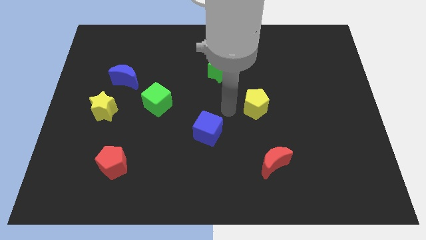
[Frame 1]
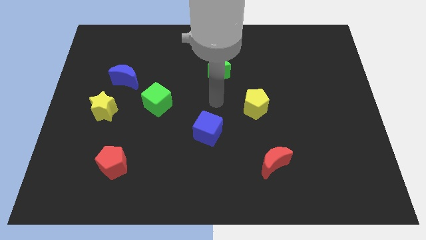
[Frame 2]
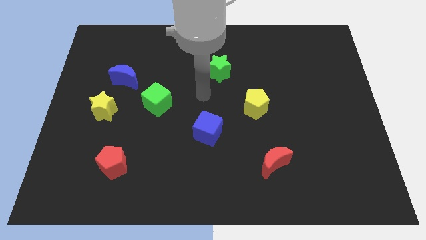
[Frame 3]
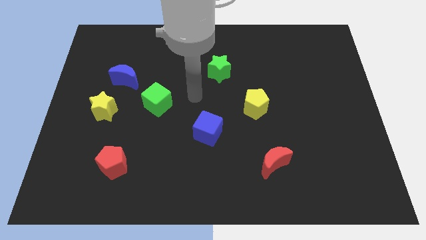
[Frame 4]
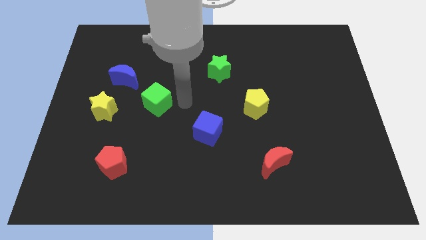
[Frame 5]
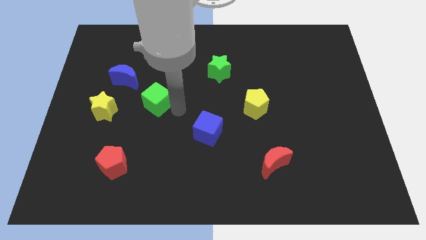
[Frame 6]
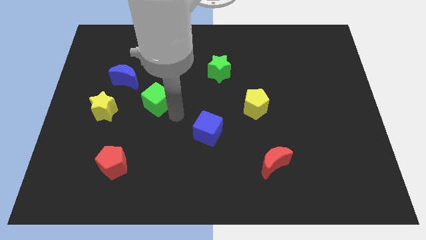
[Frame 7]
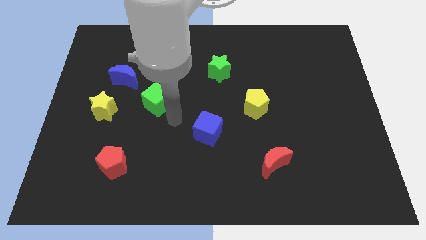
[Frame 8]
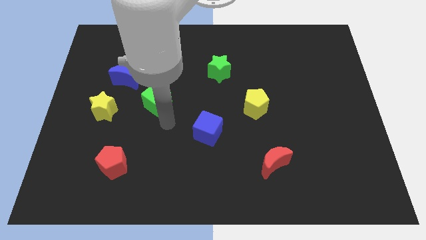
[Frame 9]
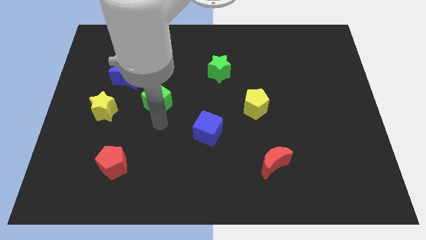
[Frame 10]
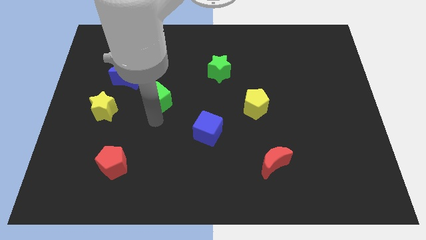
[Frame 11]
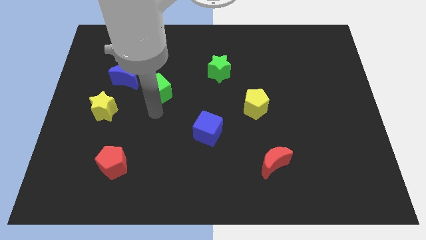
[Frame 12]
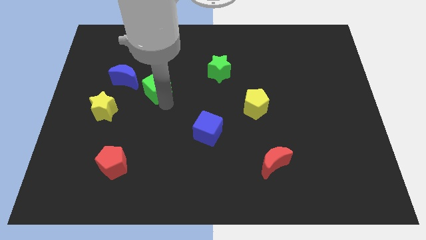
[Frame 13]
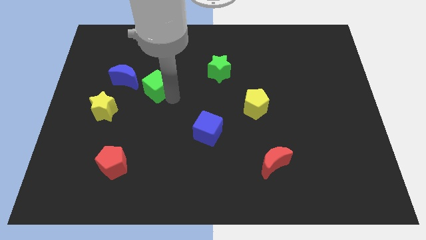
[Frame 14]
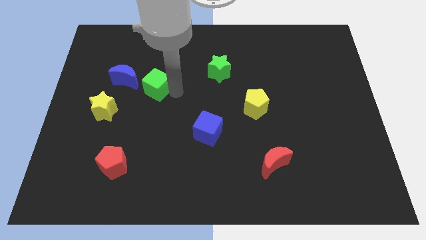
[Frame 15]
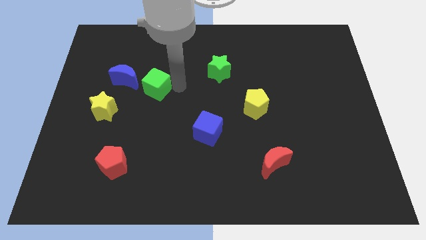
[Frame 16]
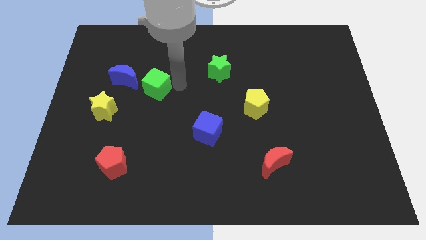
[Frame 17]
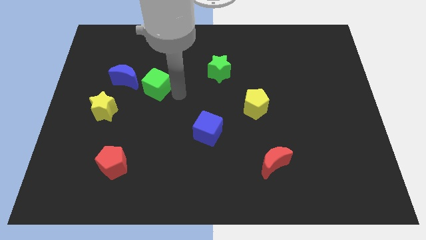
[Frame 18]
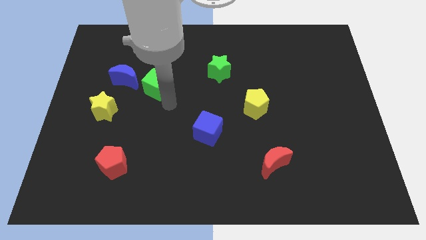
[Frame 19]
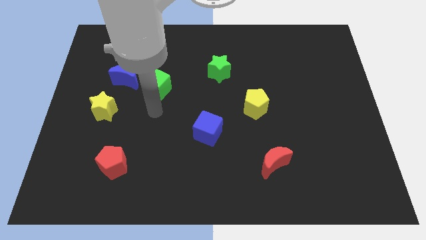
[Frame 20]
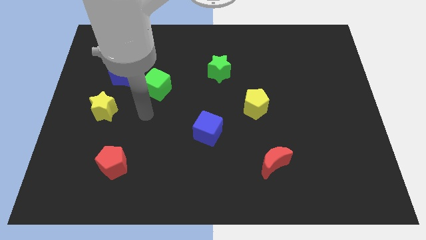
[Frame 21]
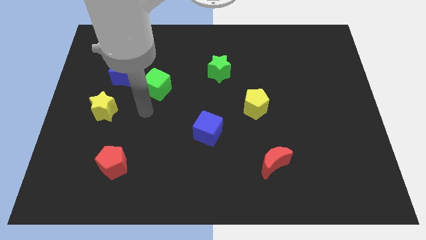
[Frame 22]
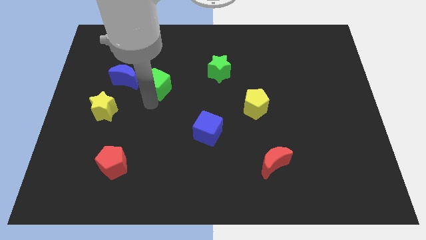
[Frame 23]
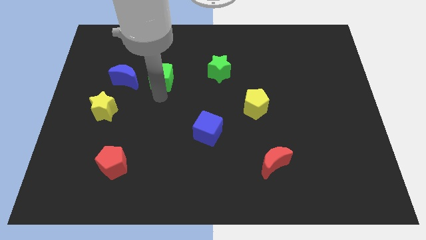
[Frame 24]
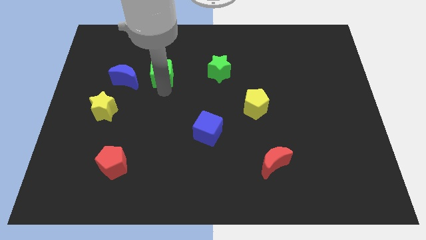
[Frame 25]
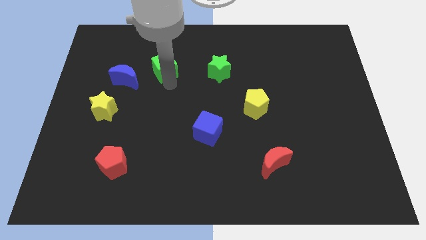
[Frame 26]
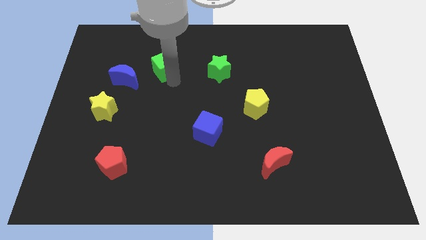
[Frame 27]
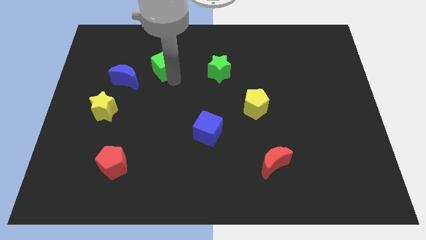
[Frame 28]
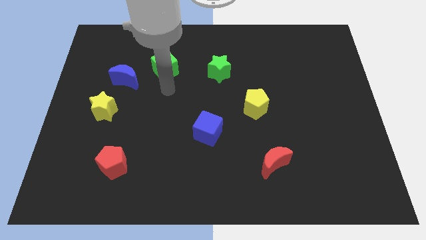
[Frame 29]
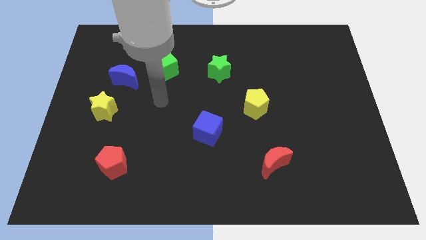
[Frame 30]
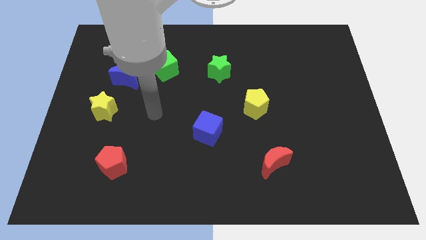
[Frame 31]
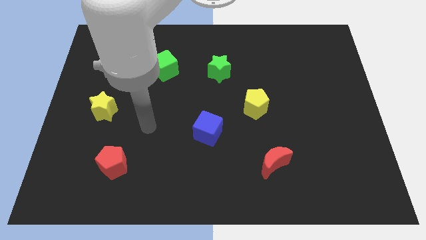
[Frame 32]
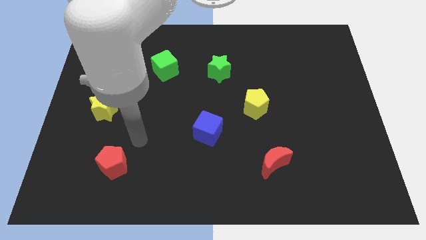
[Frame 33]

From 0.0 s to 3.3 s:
place the green cube between the green star and the blue crescent

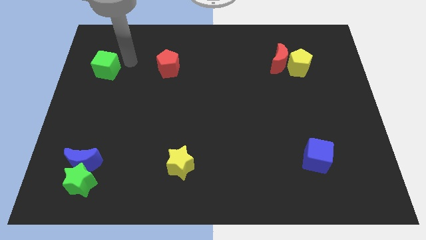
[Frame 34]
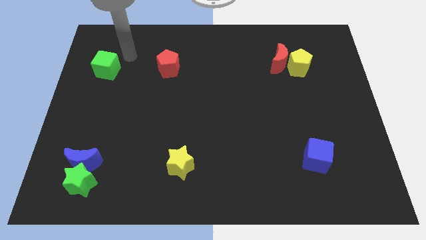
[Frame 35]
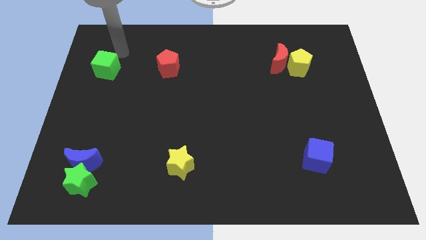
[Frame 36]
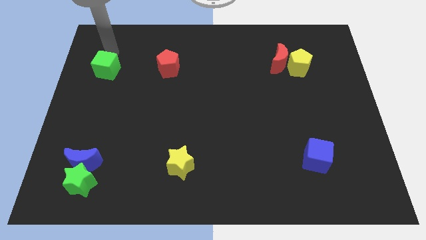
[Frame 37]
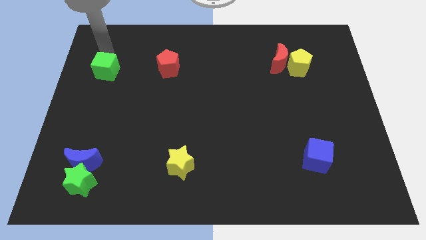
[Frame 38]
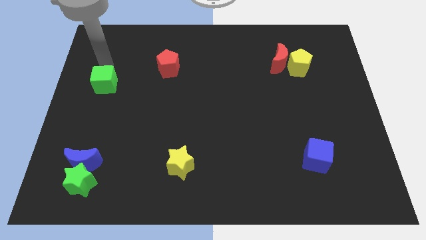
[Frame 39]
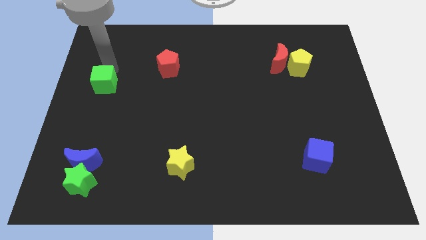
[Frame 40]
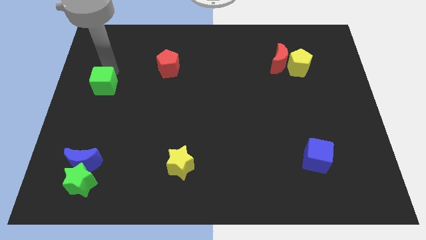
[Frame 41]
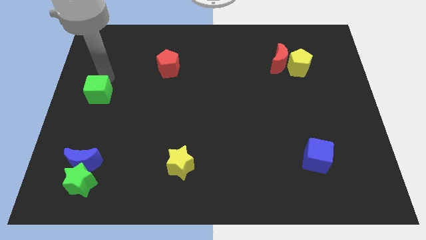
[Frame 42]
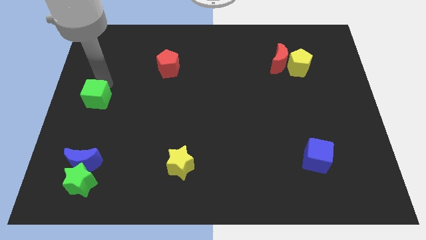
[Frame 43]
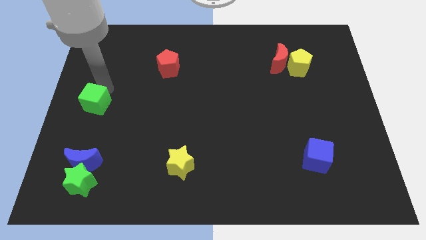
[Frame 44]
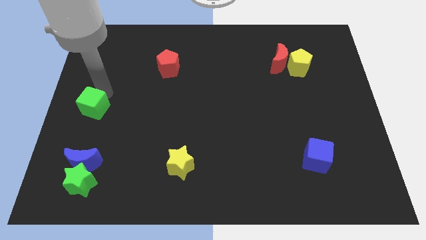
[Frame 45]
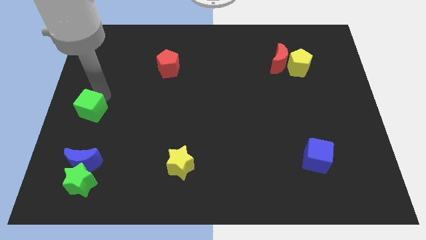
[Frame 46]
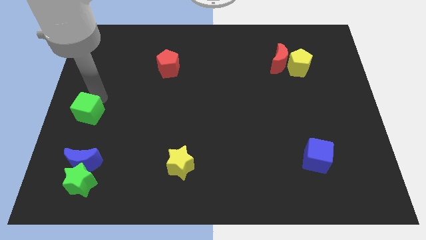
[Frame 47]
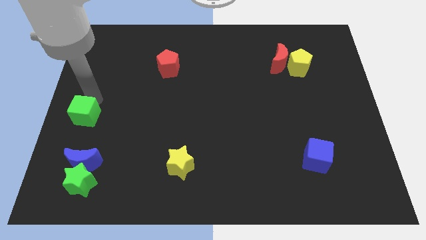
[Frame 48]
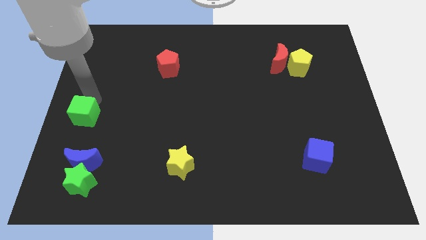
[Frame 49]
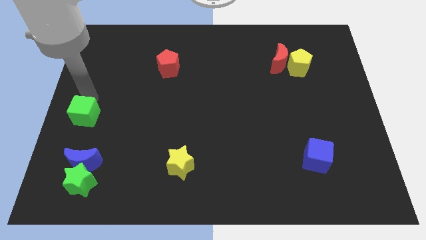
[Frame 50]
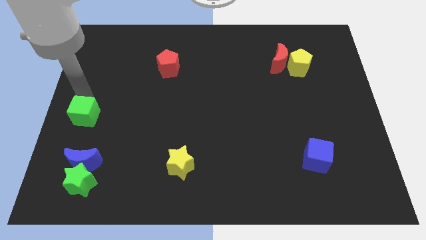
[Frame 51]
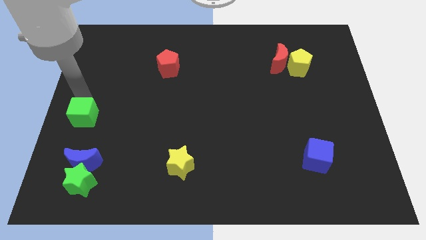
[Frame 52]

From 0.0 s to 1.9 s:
move the green cube towards the blue moon

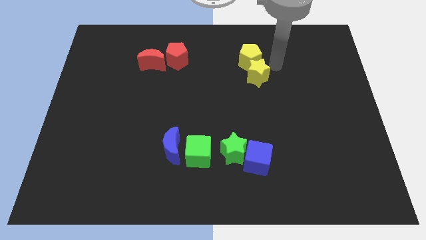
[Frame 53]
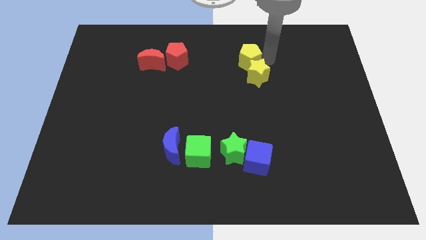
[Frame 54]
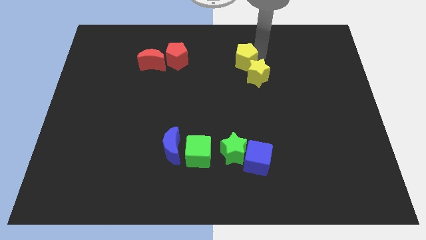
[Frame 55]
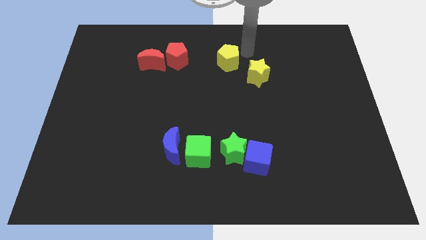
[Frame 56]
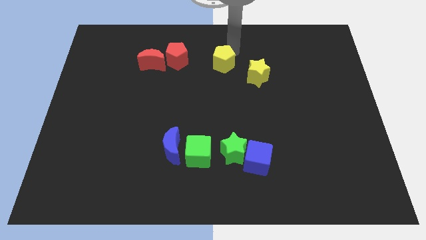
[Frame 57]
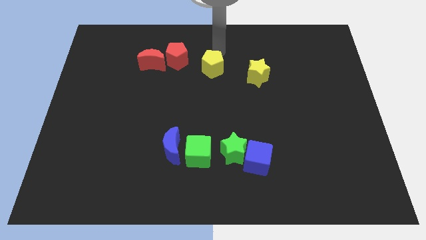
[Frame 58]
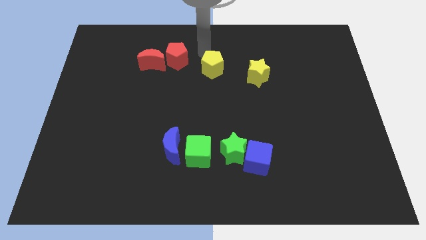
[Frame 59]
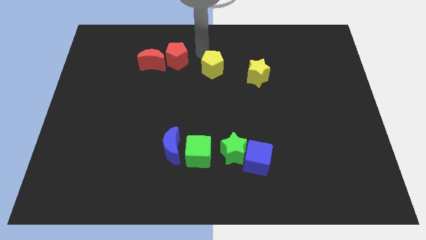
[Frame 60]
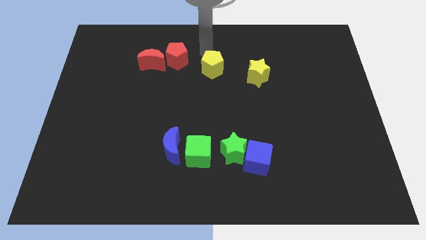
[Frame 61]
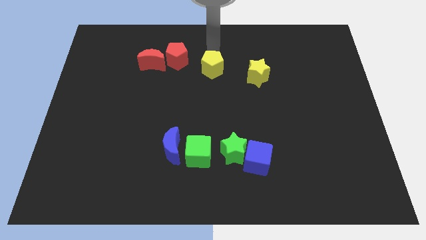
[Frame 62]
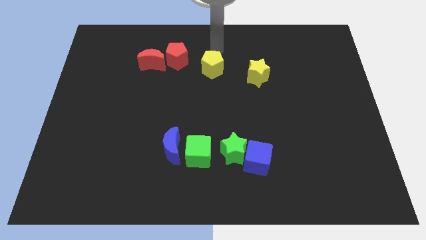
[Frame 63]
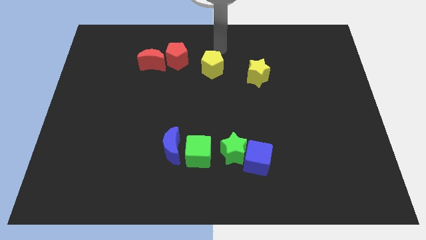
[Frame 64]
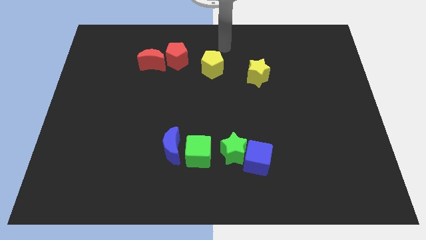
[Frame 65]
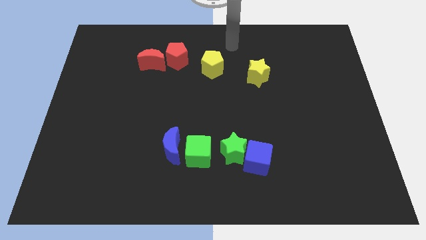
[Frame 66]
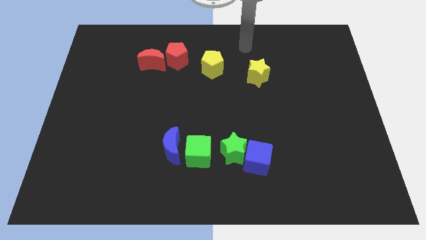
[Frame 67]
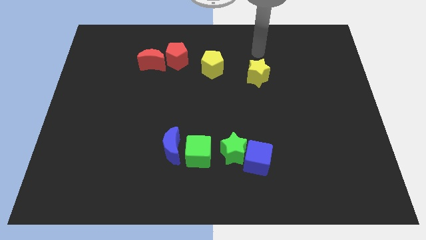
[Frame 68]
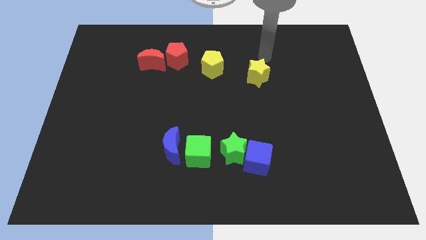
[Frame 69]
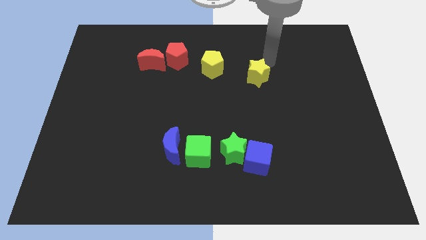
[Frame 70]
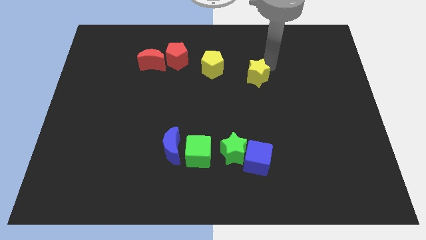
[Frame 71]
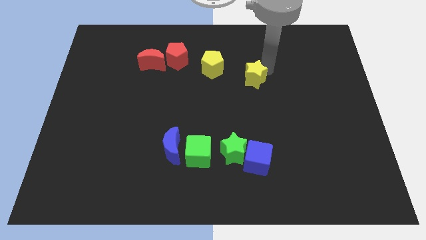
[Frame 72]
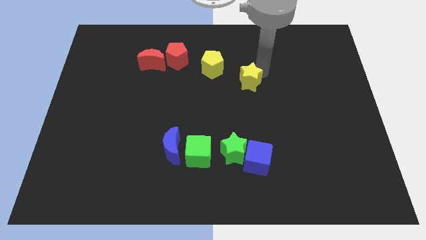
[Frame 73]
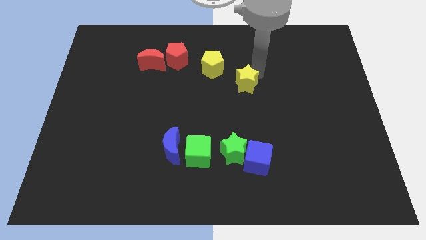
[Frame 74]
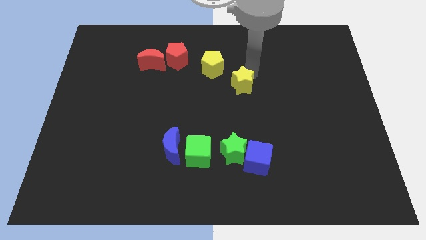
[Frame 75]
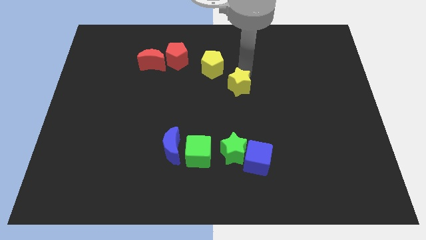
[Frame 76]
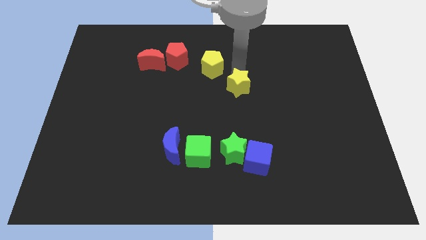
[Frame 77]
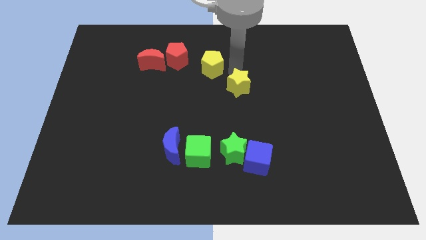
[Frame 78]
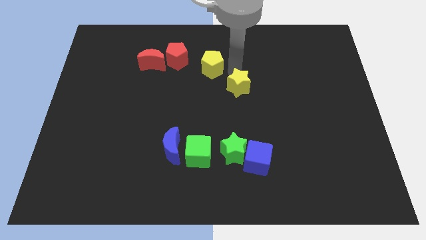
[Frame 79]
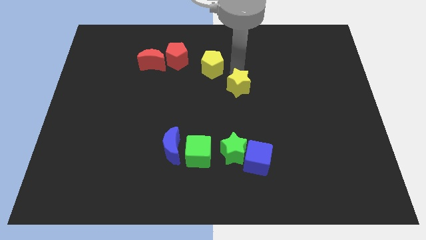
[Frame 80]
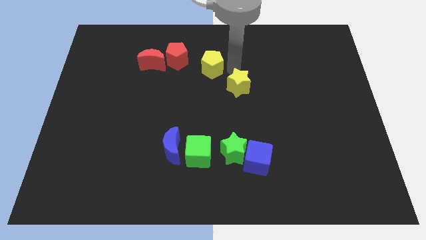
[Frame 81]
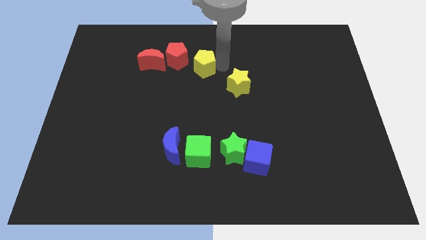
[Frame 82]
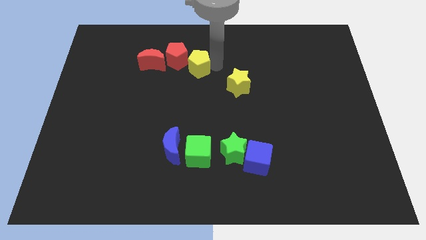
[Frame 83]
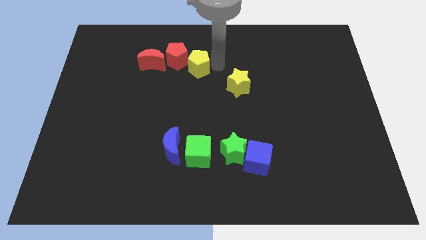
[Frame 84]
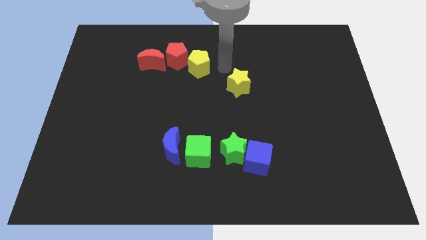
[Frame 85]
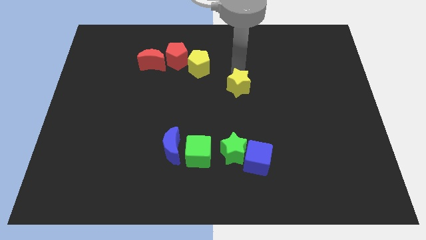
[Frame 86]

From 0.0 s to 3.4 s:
move the yellow pentagon right to the red pentagon

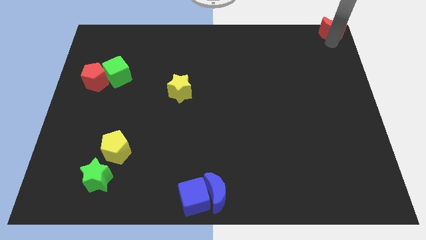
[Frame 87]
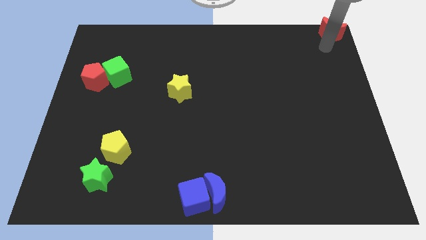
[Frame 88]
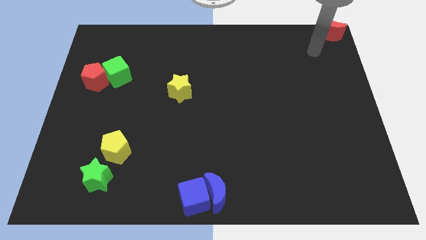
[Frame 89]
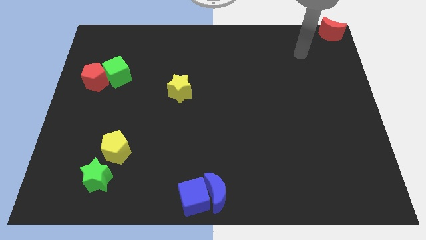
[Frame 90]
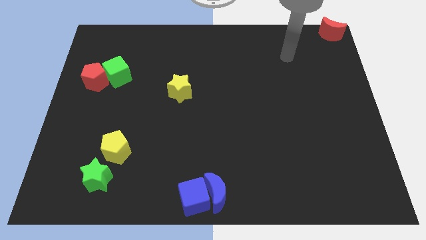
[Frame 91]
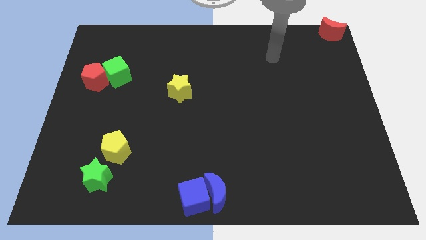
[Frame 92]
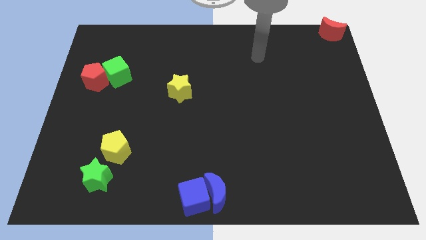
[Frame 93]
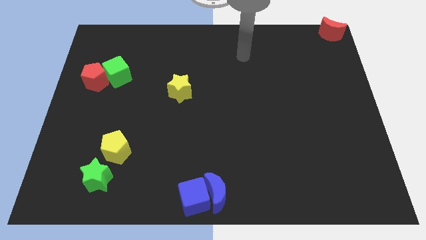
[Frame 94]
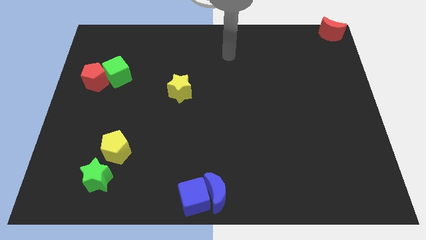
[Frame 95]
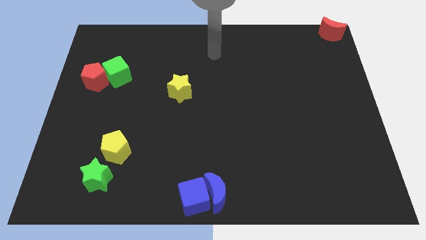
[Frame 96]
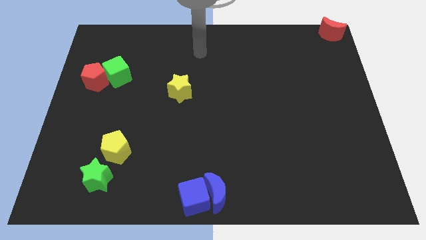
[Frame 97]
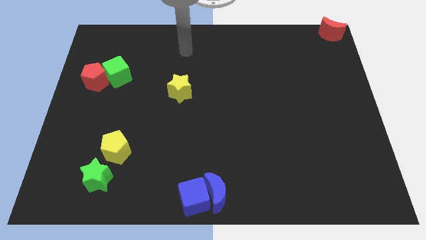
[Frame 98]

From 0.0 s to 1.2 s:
move your arm away from red crescent
